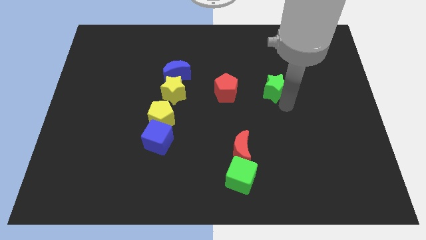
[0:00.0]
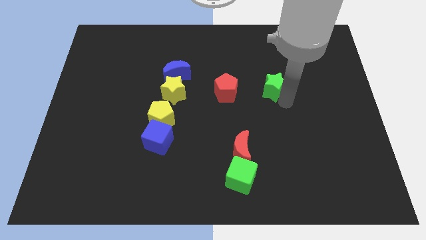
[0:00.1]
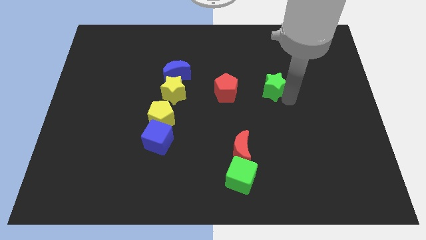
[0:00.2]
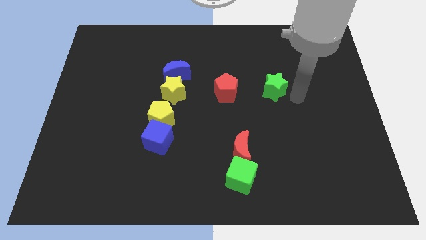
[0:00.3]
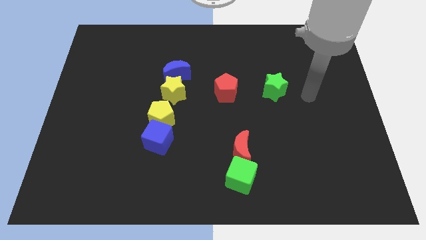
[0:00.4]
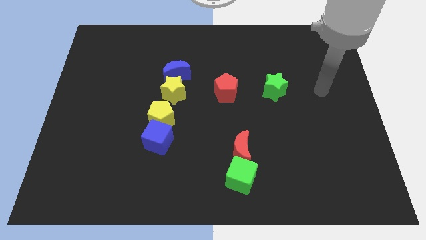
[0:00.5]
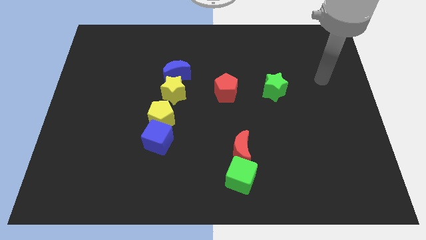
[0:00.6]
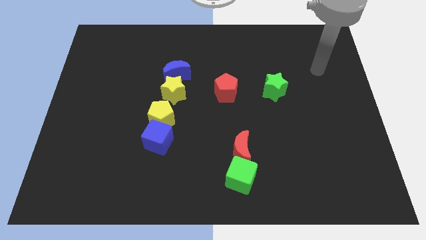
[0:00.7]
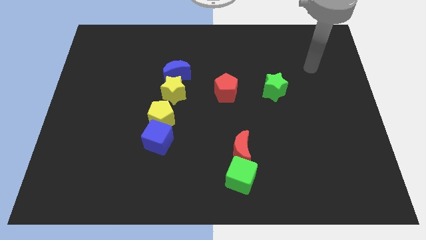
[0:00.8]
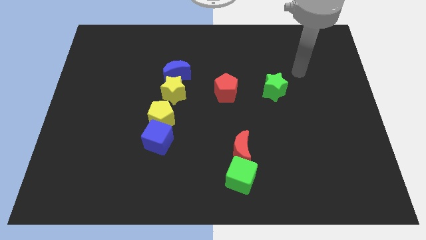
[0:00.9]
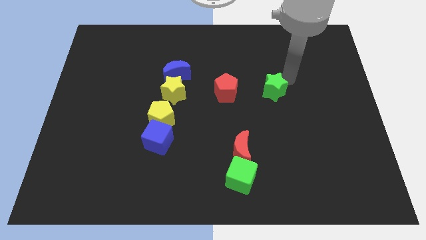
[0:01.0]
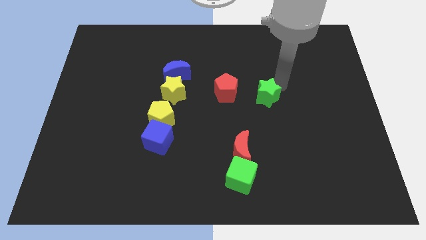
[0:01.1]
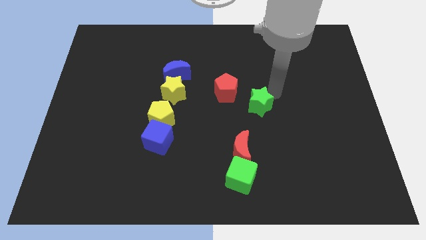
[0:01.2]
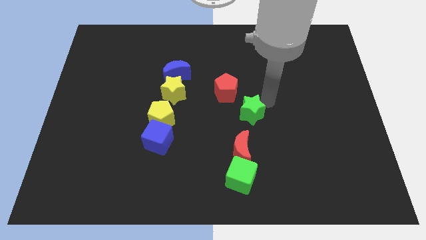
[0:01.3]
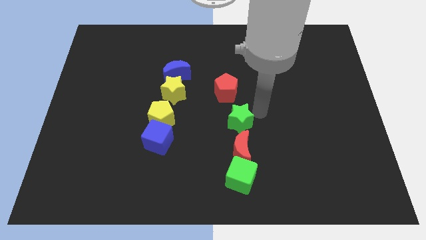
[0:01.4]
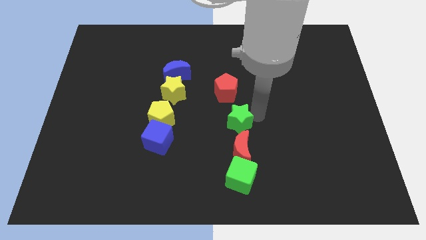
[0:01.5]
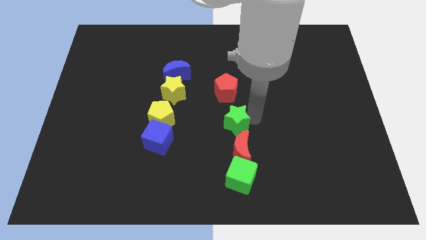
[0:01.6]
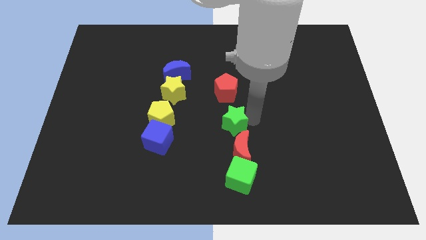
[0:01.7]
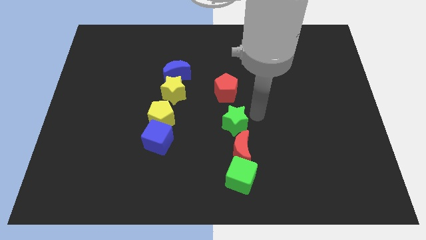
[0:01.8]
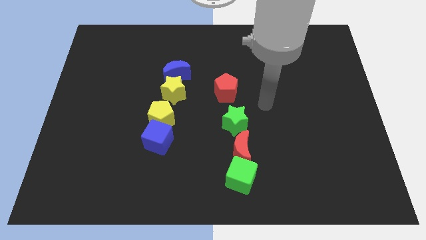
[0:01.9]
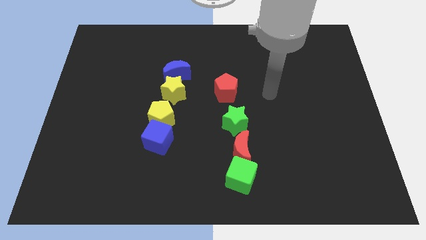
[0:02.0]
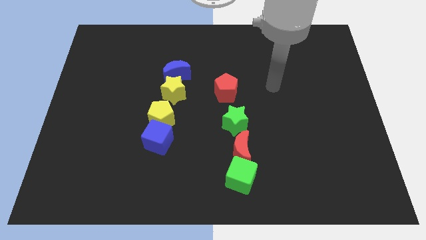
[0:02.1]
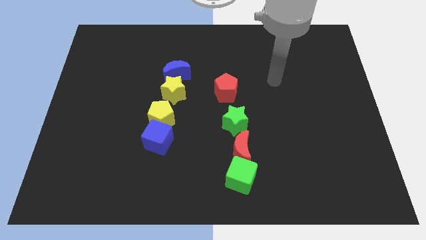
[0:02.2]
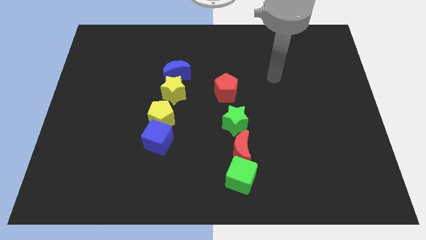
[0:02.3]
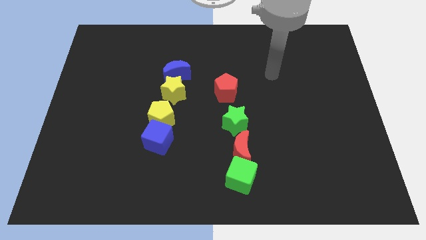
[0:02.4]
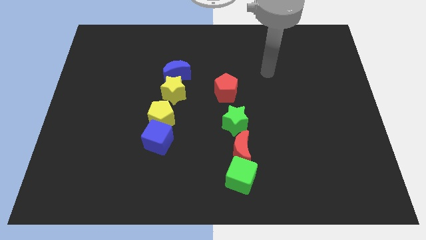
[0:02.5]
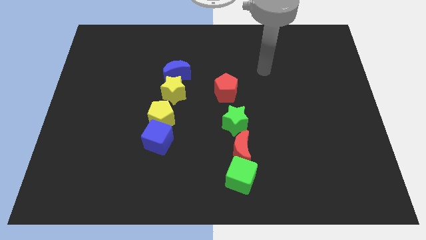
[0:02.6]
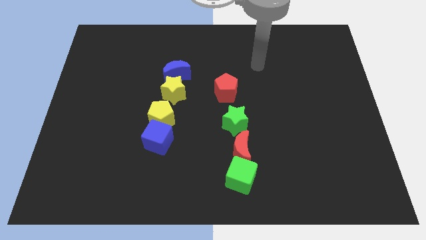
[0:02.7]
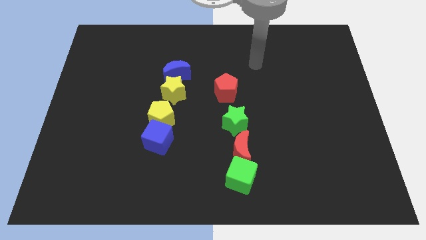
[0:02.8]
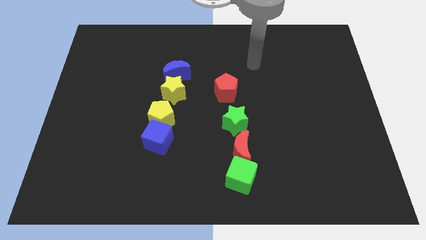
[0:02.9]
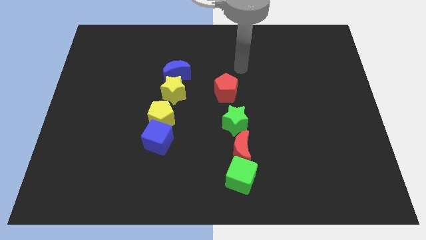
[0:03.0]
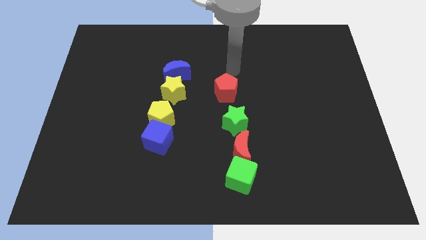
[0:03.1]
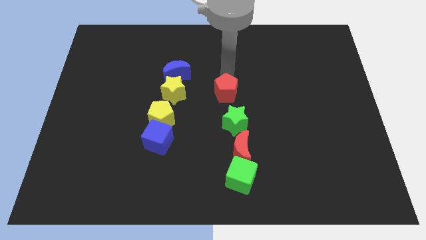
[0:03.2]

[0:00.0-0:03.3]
move the green star below to the red pentagon

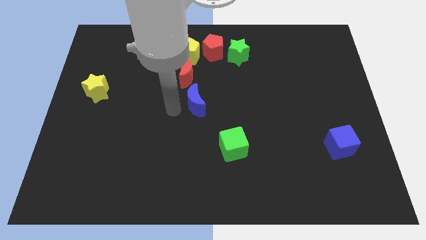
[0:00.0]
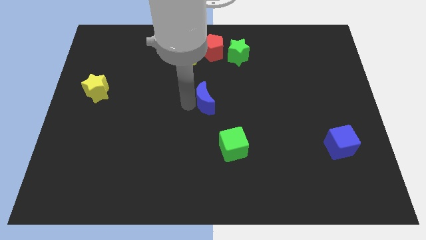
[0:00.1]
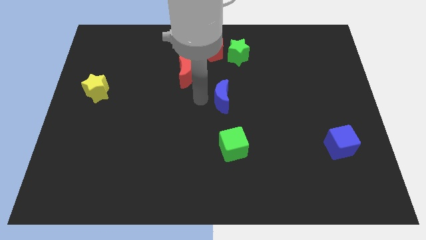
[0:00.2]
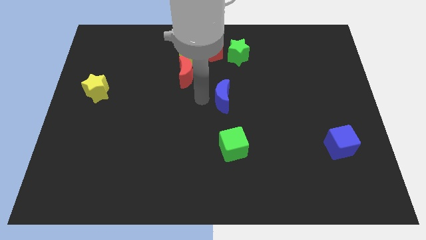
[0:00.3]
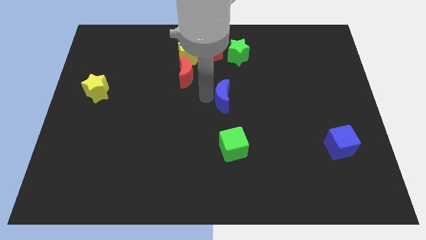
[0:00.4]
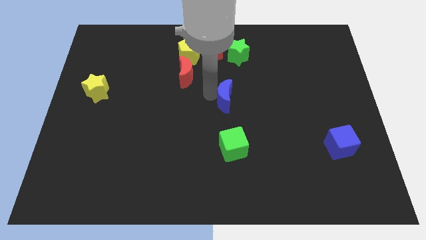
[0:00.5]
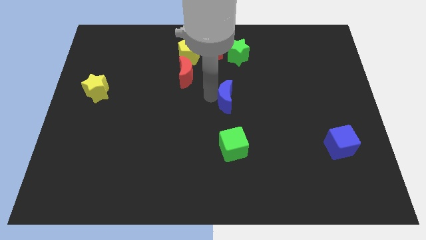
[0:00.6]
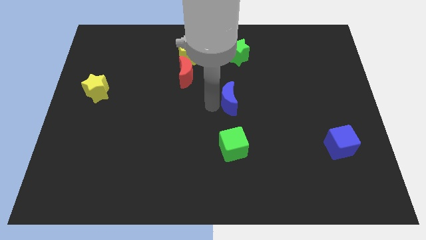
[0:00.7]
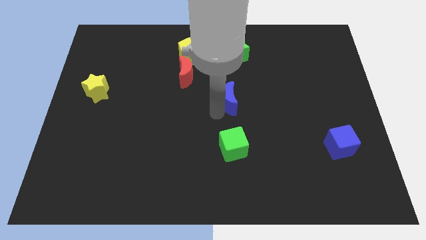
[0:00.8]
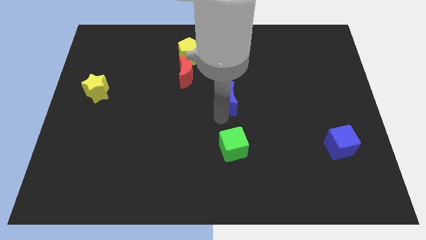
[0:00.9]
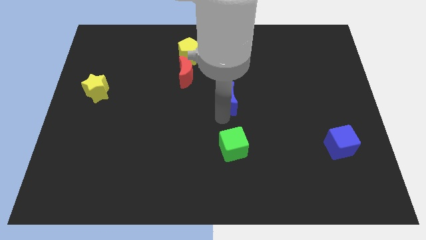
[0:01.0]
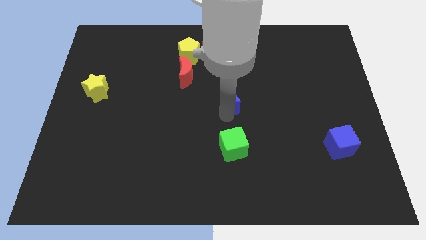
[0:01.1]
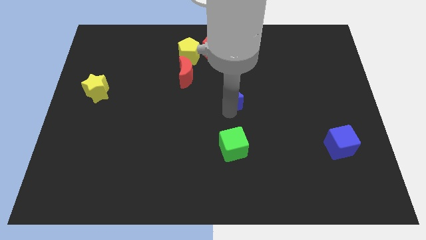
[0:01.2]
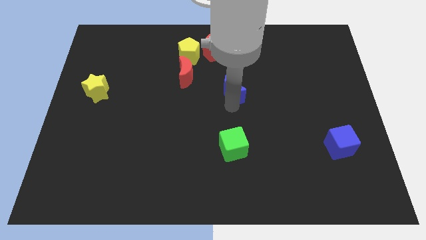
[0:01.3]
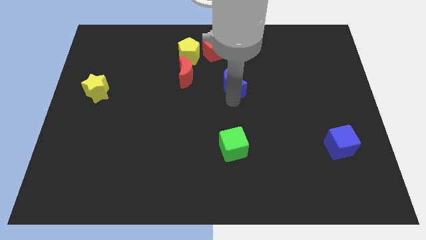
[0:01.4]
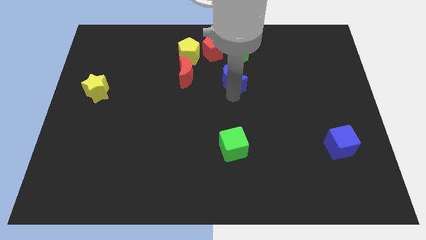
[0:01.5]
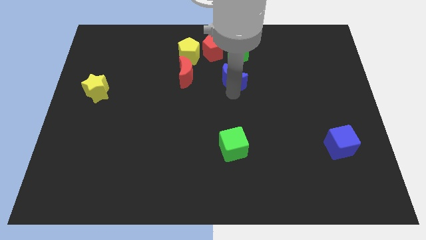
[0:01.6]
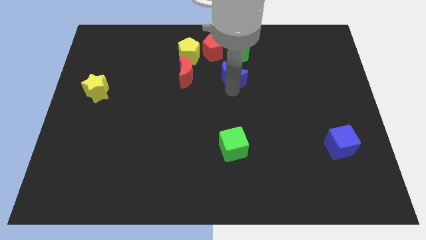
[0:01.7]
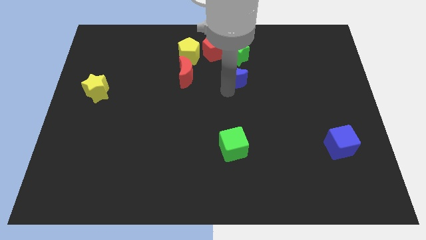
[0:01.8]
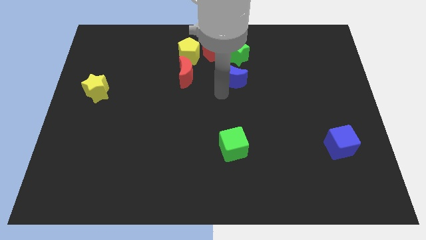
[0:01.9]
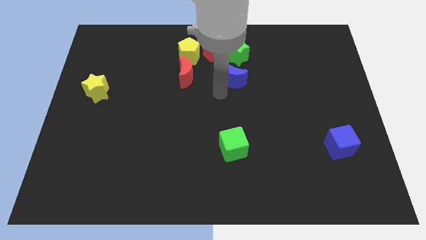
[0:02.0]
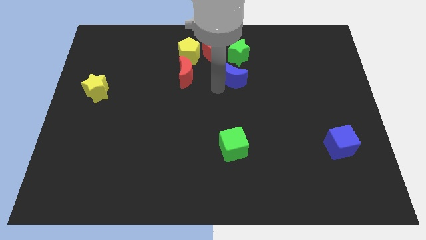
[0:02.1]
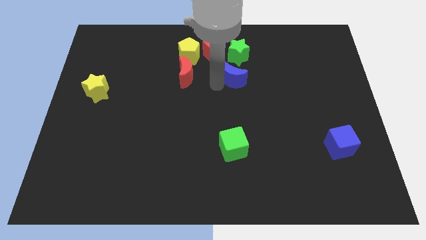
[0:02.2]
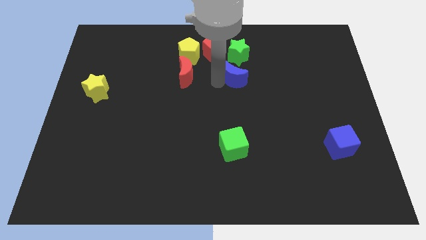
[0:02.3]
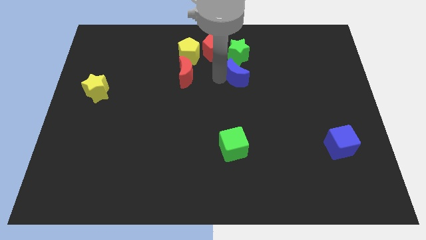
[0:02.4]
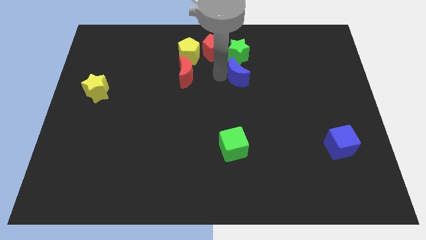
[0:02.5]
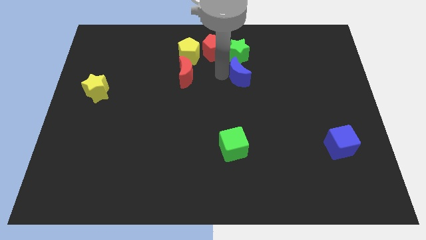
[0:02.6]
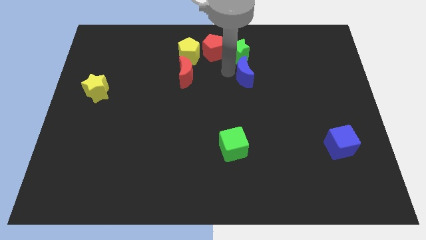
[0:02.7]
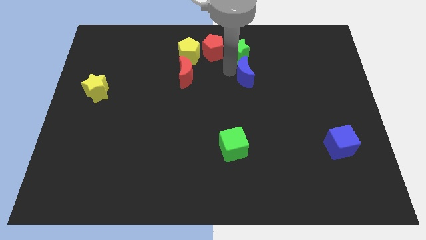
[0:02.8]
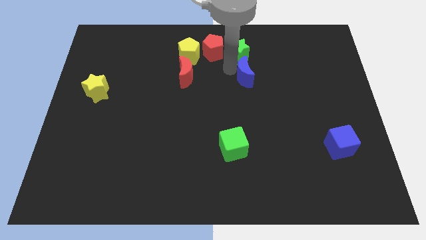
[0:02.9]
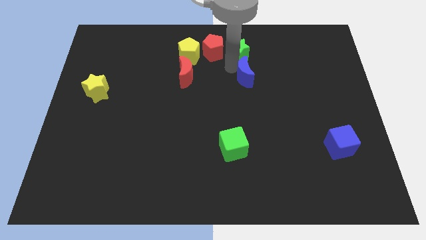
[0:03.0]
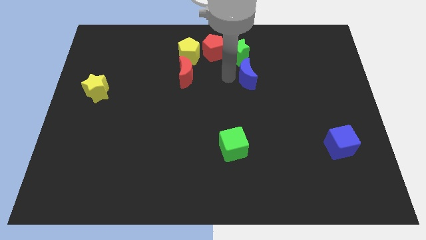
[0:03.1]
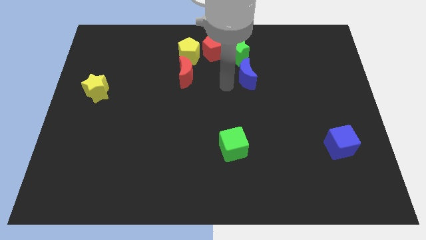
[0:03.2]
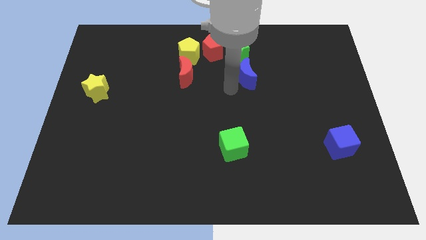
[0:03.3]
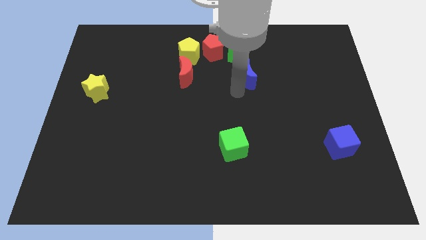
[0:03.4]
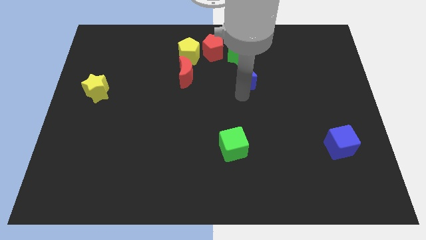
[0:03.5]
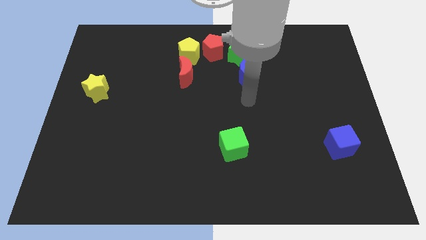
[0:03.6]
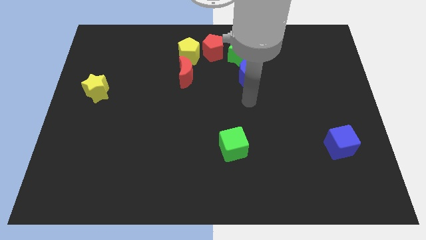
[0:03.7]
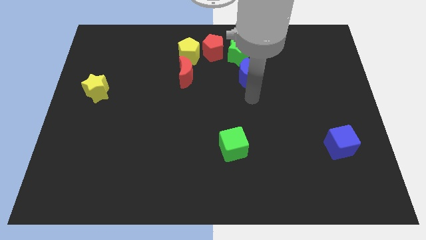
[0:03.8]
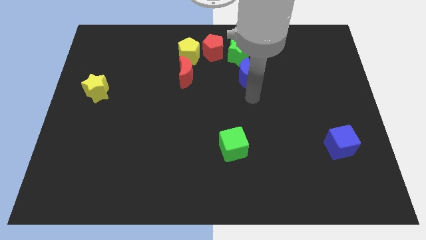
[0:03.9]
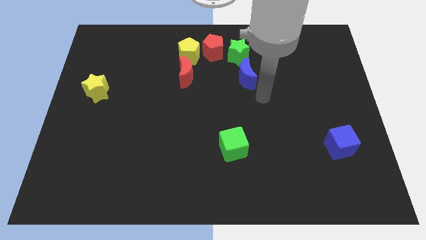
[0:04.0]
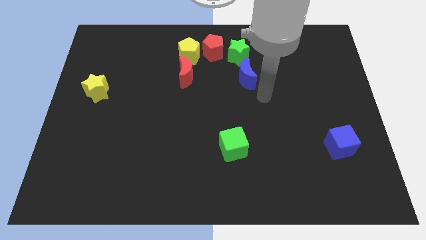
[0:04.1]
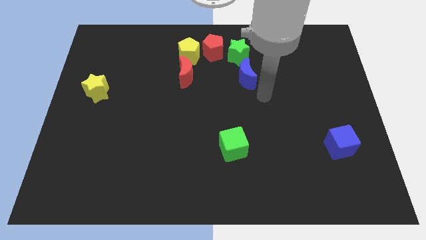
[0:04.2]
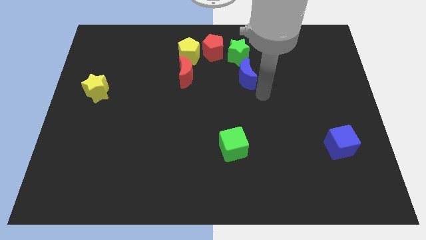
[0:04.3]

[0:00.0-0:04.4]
push the blue crescent towards the green star

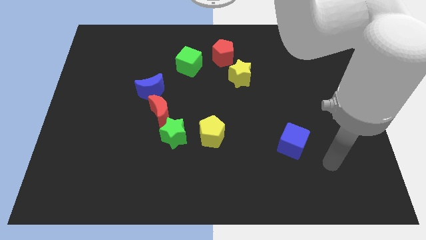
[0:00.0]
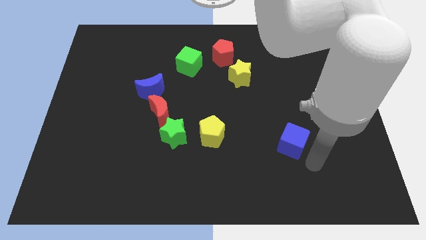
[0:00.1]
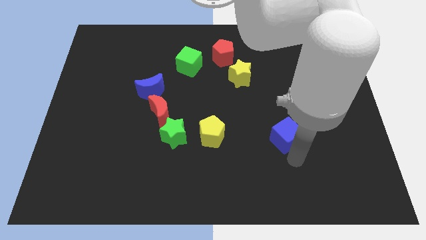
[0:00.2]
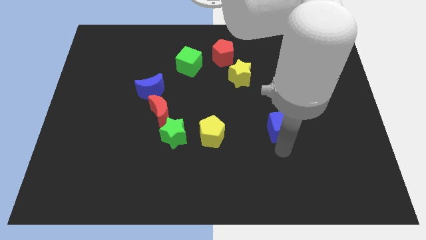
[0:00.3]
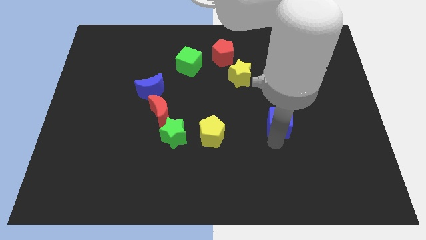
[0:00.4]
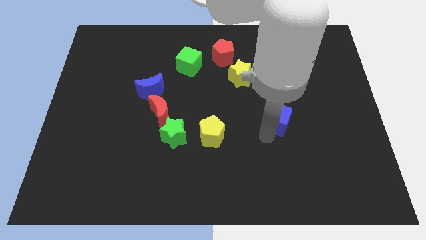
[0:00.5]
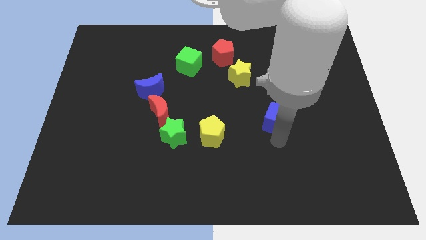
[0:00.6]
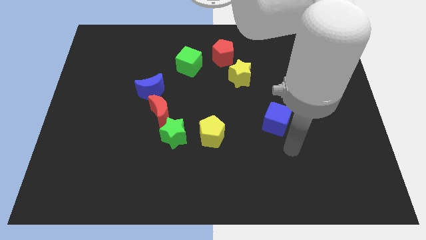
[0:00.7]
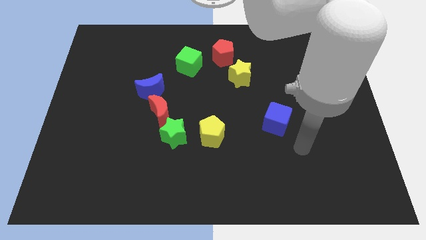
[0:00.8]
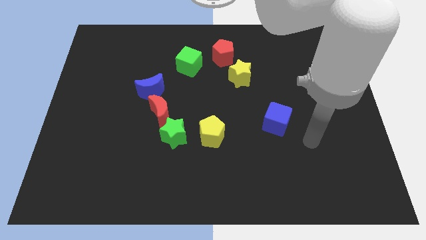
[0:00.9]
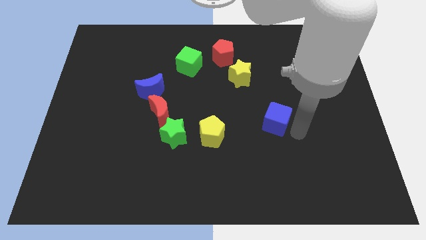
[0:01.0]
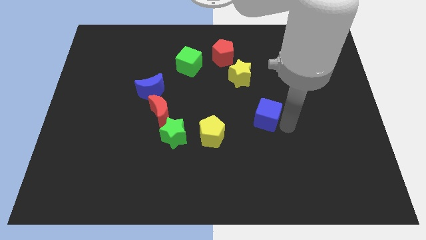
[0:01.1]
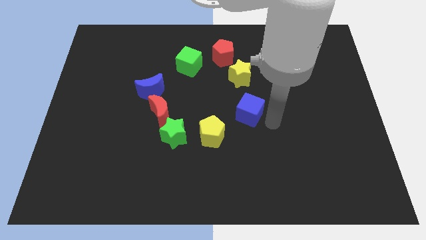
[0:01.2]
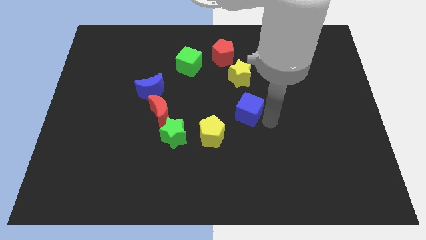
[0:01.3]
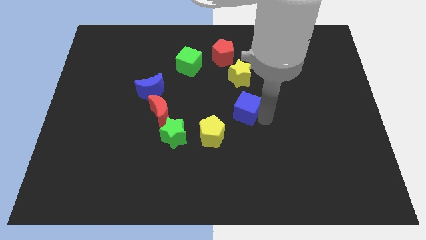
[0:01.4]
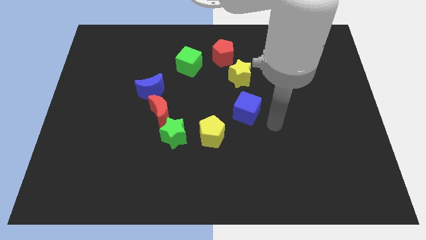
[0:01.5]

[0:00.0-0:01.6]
move the blue cube to the bottom of the yellow star
